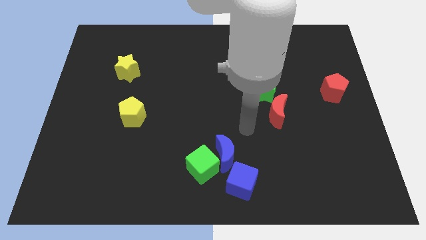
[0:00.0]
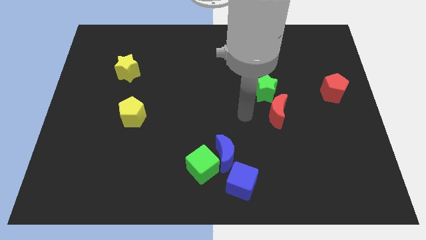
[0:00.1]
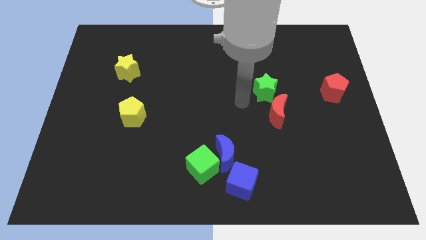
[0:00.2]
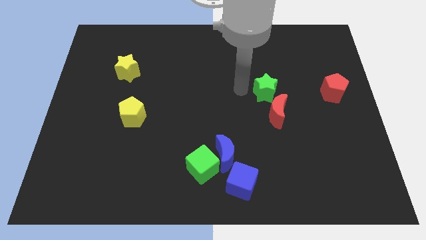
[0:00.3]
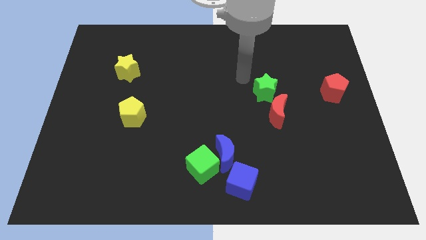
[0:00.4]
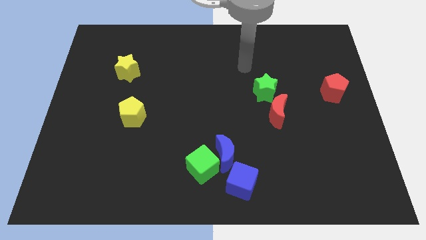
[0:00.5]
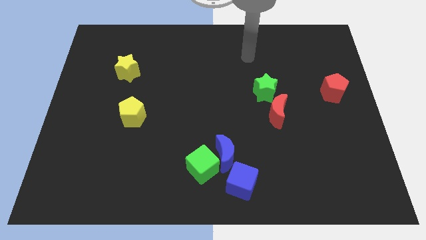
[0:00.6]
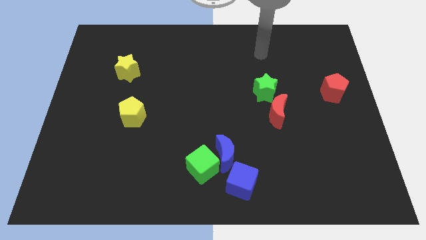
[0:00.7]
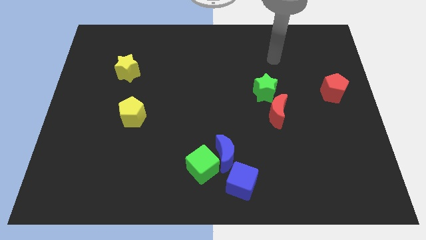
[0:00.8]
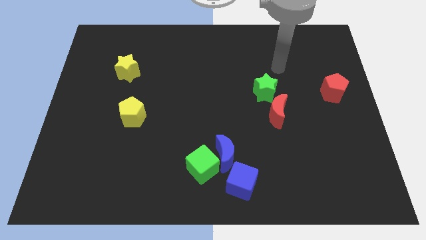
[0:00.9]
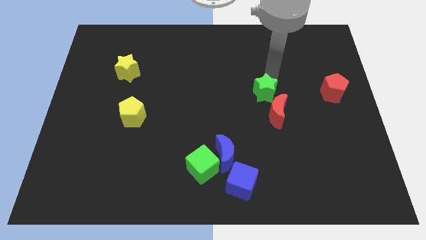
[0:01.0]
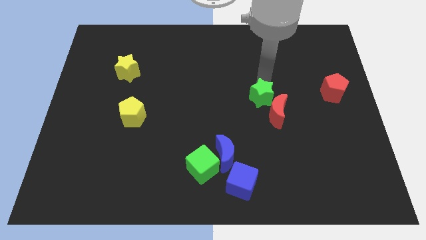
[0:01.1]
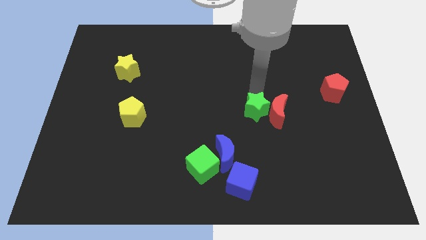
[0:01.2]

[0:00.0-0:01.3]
put the green star left to the red moon

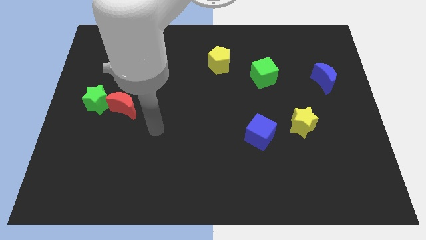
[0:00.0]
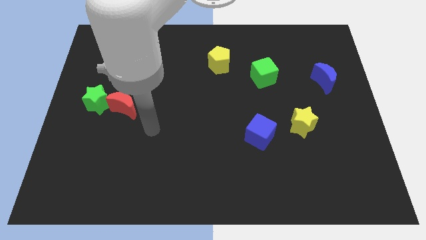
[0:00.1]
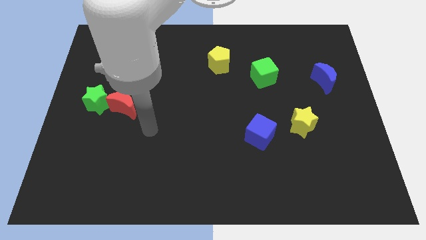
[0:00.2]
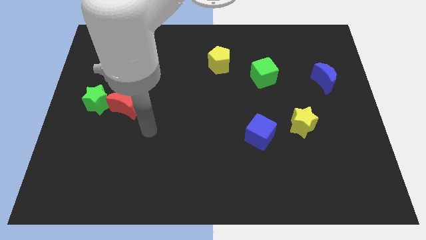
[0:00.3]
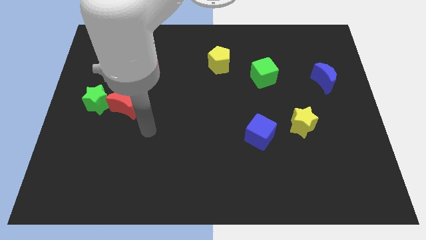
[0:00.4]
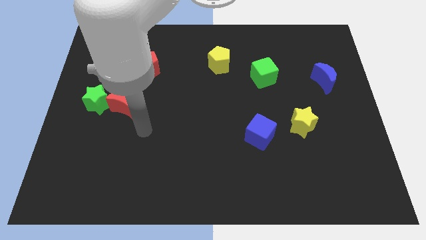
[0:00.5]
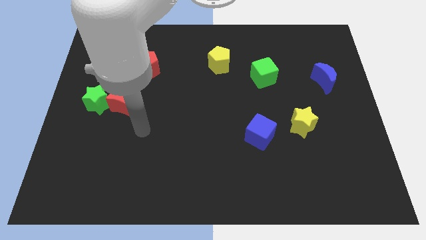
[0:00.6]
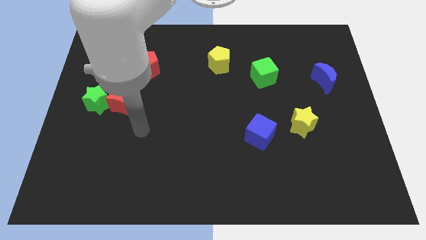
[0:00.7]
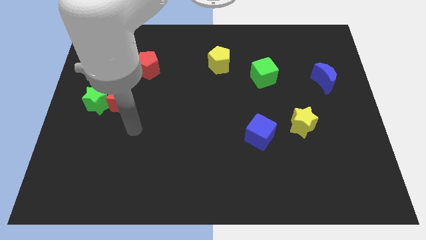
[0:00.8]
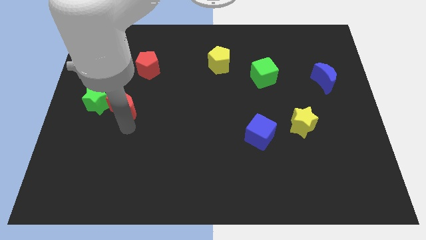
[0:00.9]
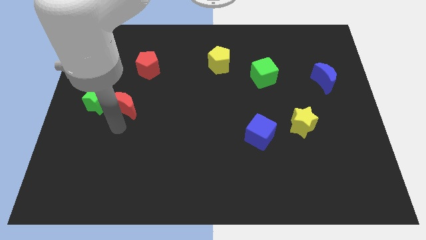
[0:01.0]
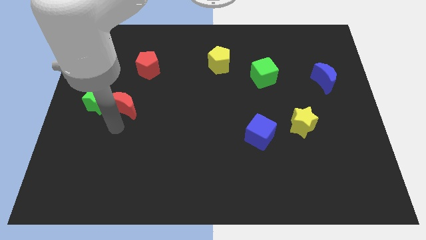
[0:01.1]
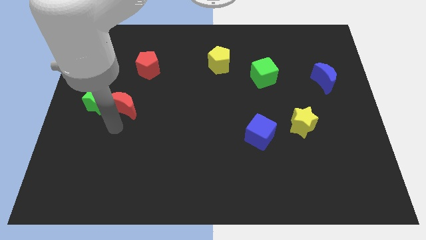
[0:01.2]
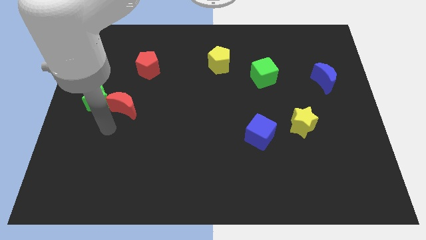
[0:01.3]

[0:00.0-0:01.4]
move arm to the bottom of red crescent

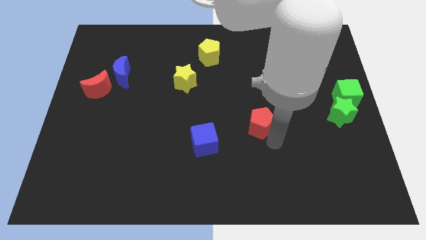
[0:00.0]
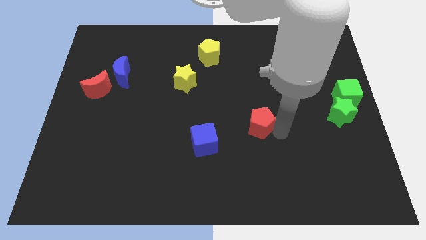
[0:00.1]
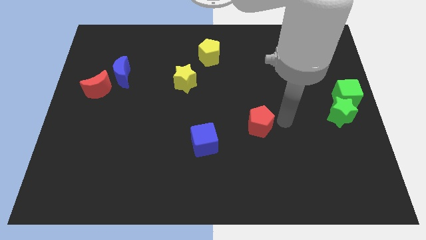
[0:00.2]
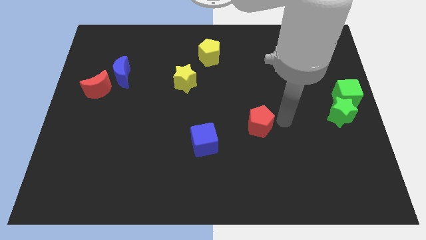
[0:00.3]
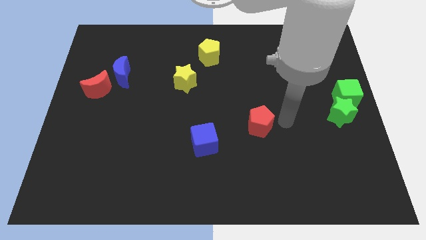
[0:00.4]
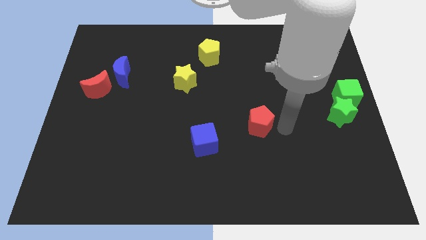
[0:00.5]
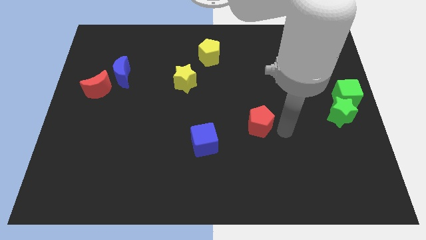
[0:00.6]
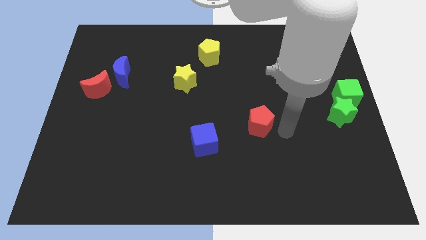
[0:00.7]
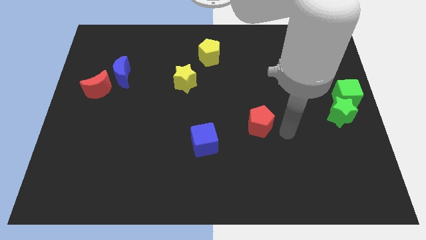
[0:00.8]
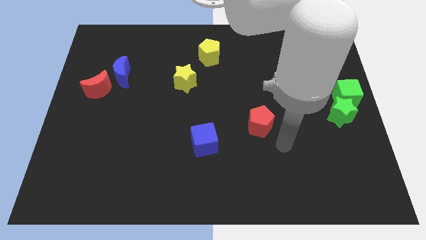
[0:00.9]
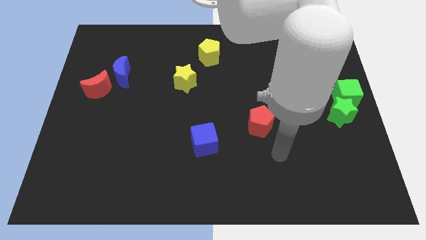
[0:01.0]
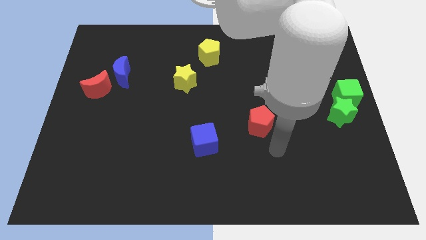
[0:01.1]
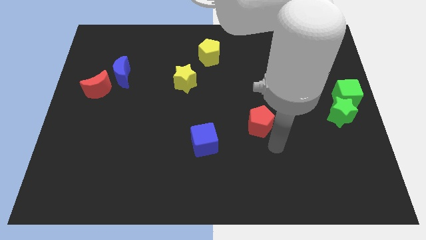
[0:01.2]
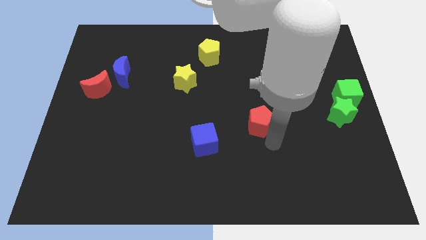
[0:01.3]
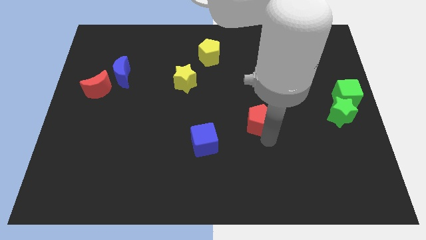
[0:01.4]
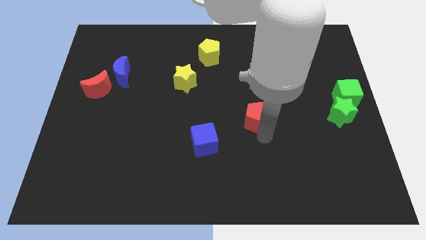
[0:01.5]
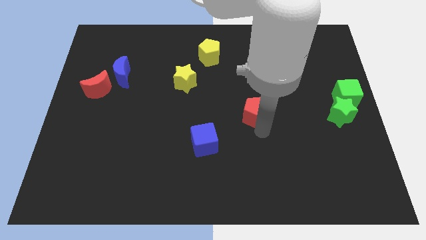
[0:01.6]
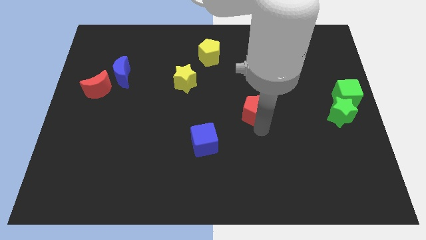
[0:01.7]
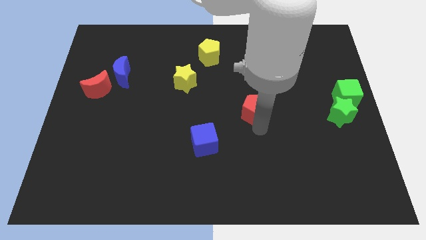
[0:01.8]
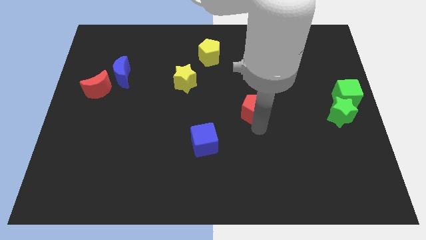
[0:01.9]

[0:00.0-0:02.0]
move the red pentagon horizontally to the left of the left of the green star

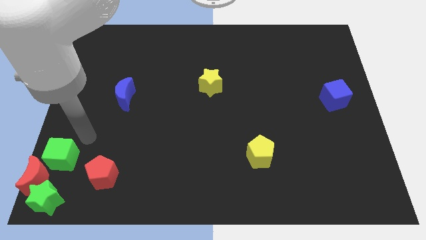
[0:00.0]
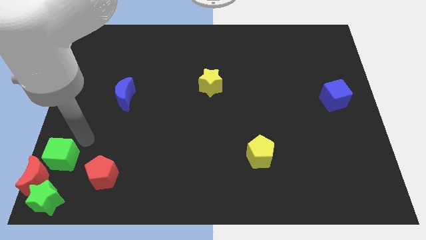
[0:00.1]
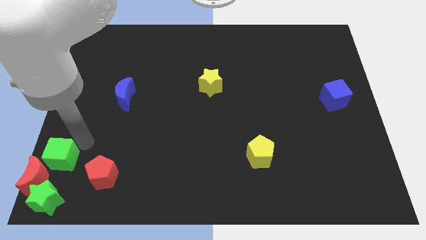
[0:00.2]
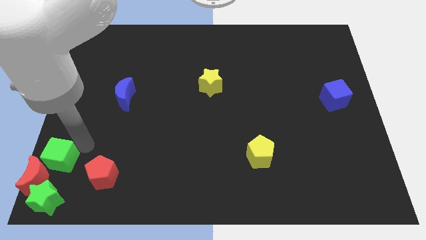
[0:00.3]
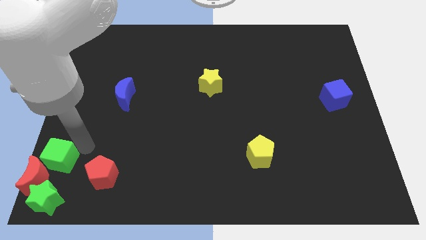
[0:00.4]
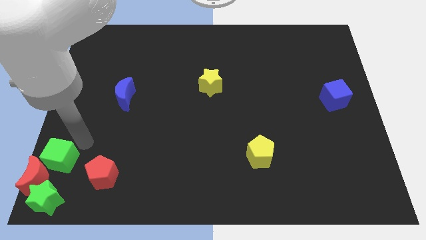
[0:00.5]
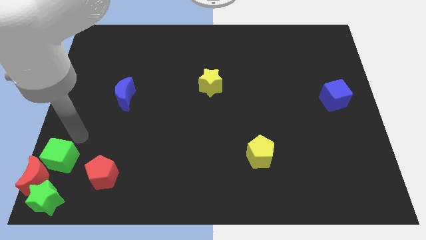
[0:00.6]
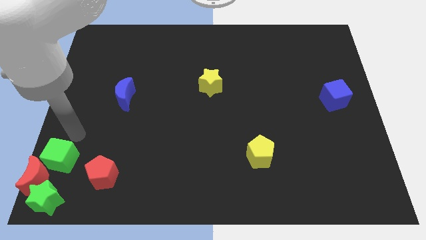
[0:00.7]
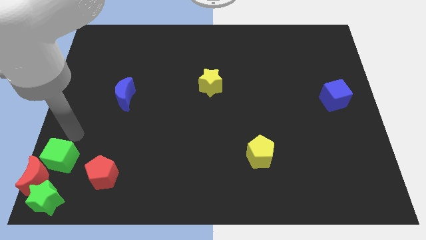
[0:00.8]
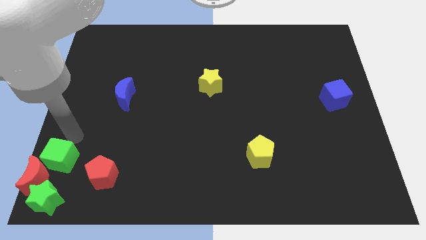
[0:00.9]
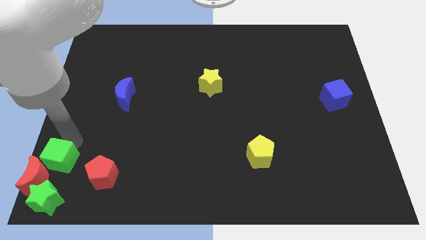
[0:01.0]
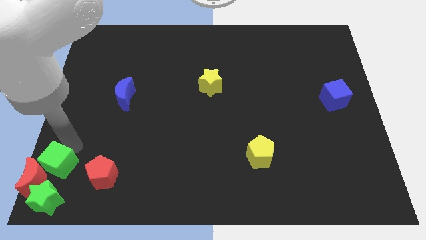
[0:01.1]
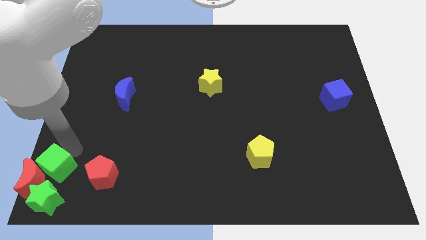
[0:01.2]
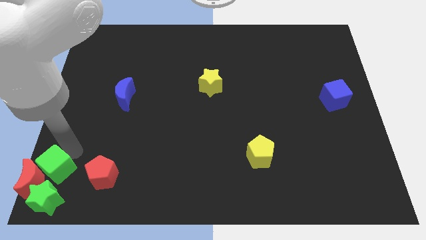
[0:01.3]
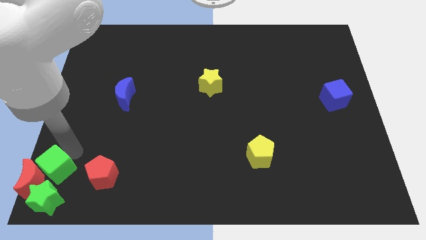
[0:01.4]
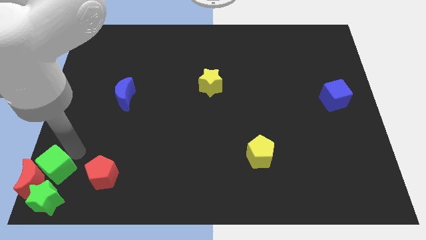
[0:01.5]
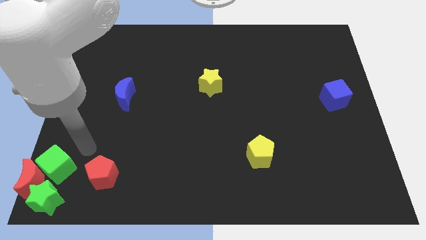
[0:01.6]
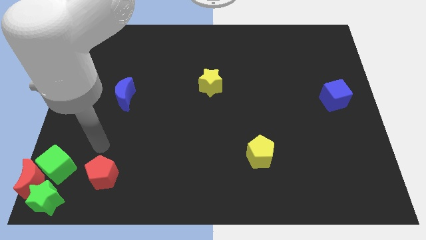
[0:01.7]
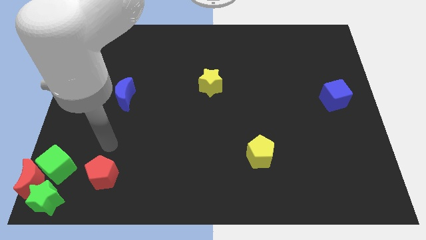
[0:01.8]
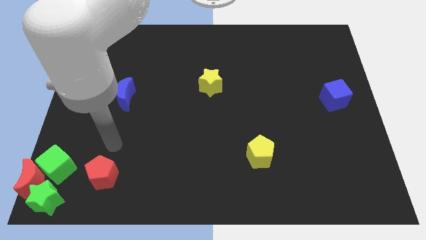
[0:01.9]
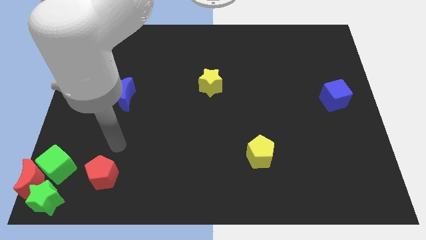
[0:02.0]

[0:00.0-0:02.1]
place green cube above green star

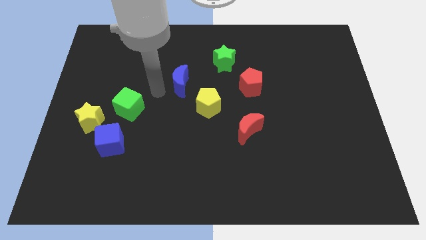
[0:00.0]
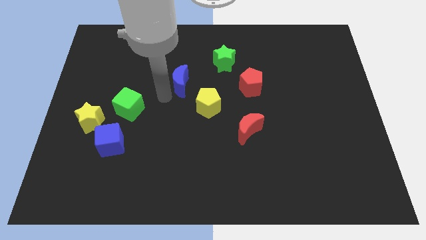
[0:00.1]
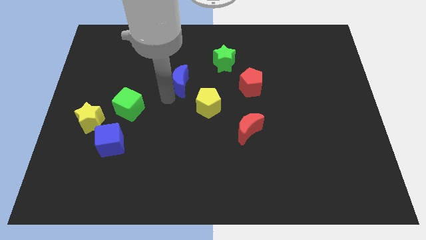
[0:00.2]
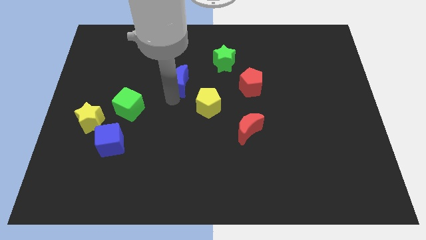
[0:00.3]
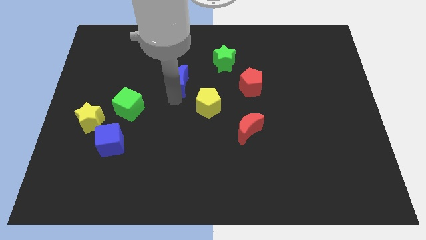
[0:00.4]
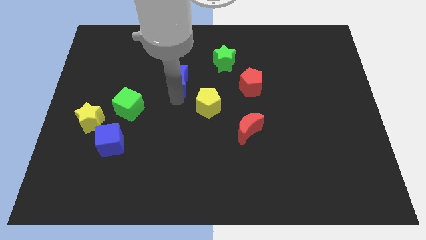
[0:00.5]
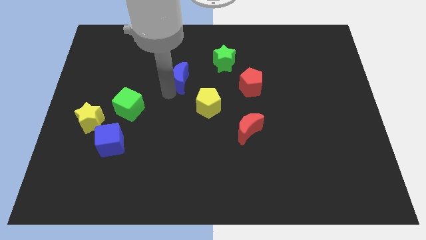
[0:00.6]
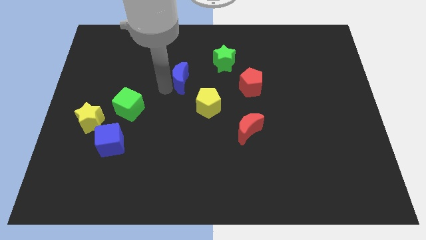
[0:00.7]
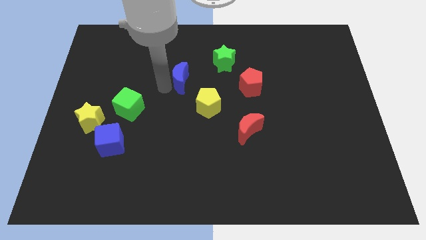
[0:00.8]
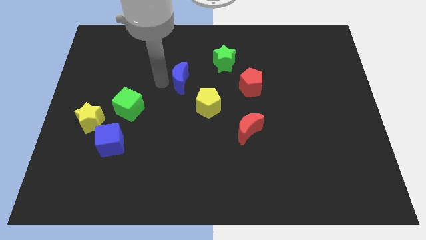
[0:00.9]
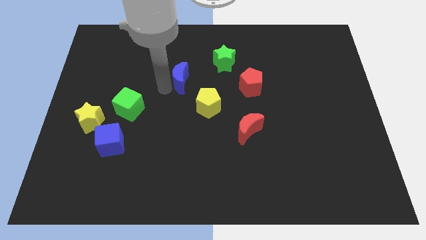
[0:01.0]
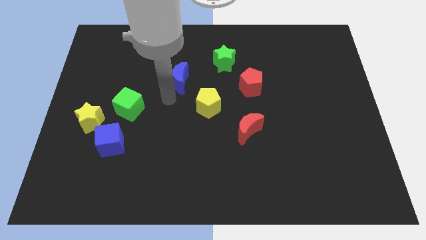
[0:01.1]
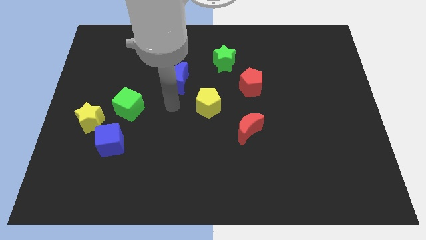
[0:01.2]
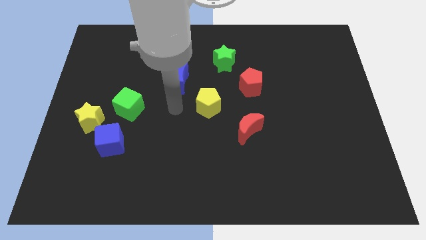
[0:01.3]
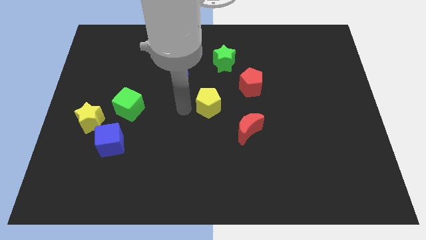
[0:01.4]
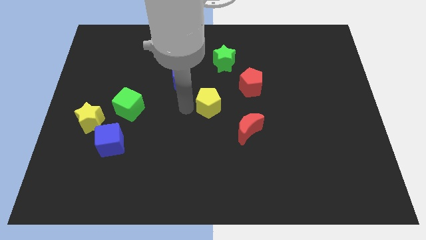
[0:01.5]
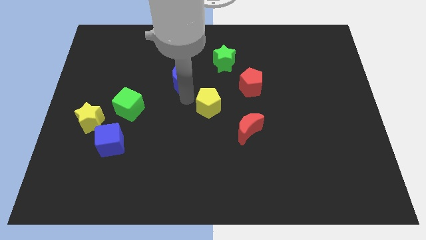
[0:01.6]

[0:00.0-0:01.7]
move the blue crescent slightly to the top

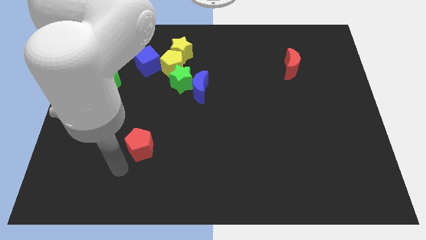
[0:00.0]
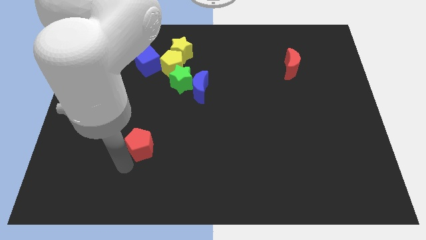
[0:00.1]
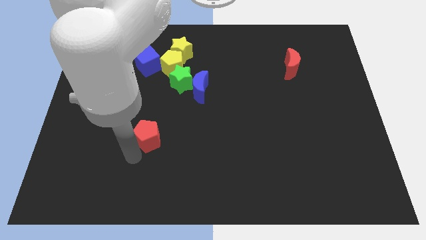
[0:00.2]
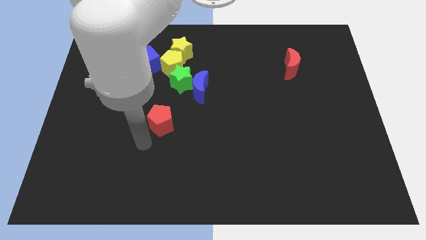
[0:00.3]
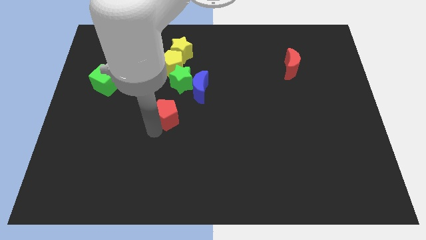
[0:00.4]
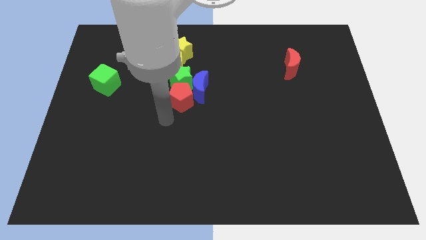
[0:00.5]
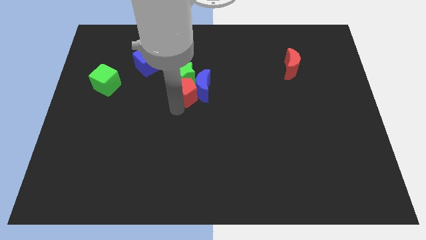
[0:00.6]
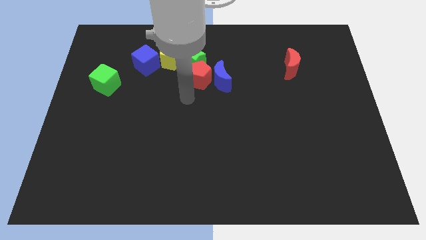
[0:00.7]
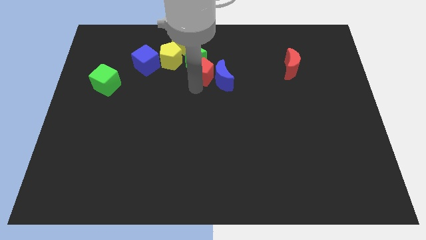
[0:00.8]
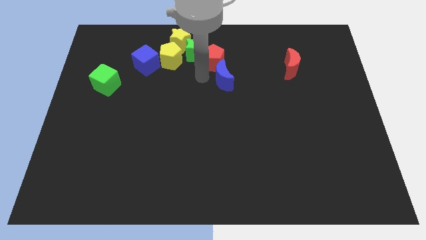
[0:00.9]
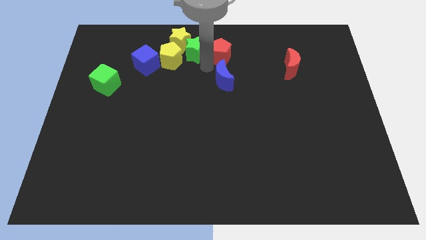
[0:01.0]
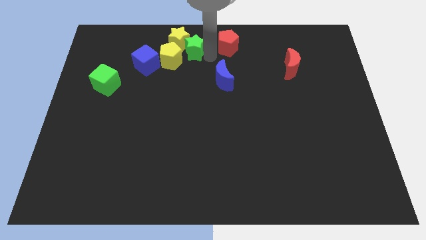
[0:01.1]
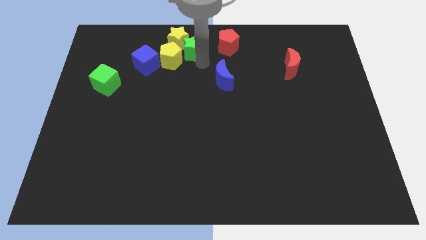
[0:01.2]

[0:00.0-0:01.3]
move the red pentagon above the blue moon
